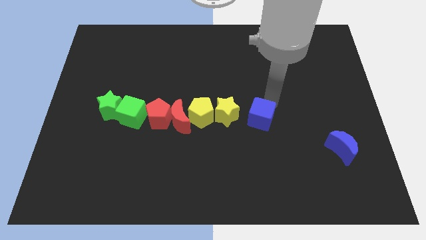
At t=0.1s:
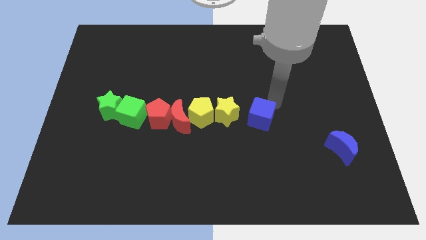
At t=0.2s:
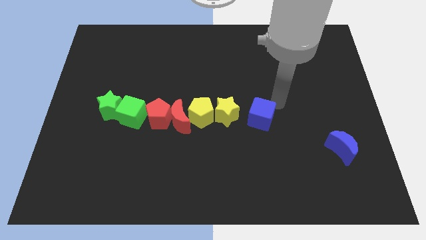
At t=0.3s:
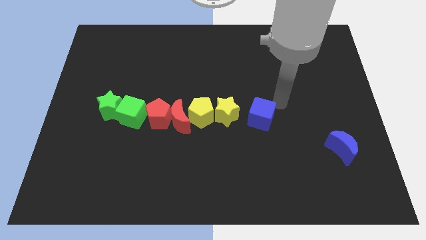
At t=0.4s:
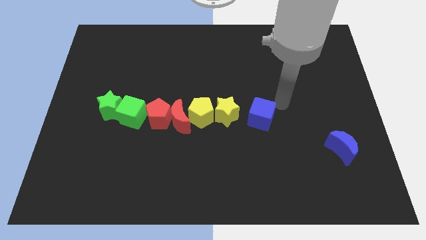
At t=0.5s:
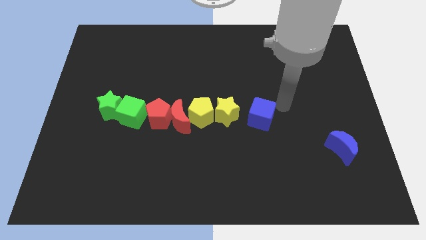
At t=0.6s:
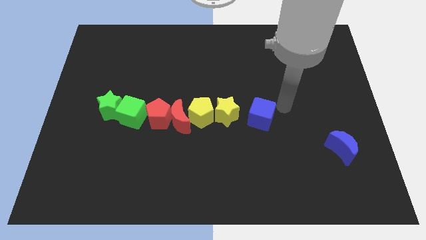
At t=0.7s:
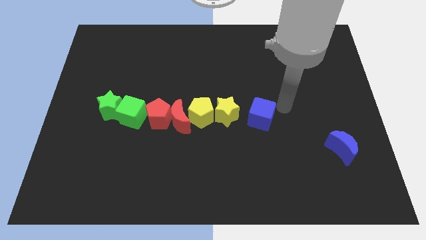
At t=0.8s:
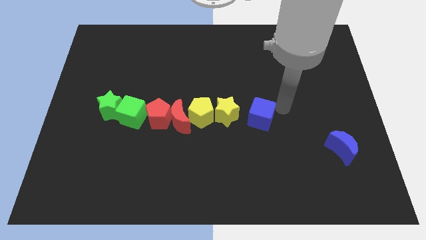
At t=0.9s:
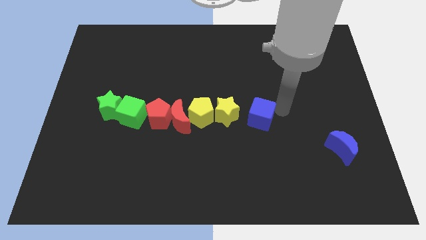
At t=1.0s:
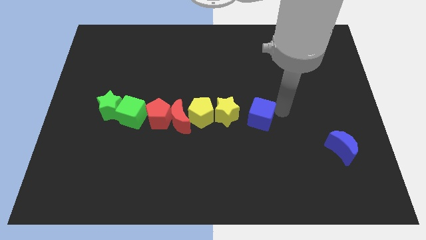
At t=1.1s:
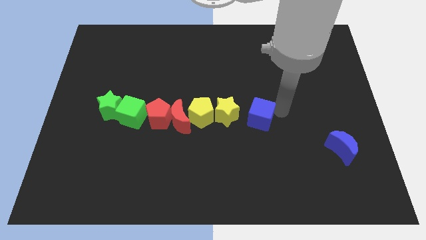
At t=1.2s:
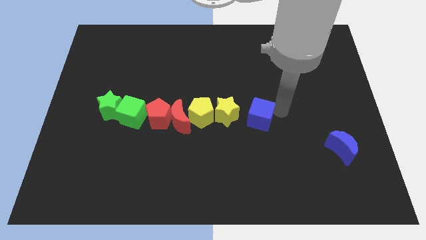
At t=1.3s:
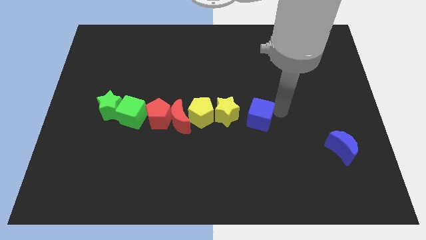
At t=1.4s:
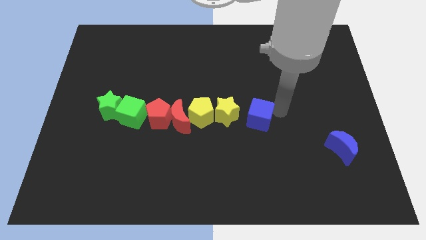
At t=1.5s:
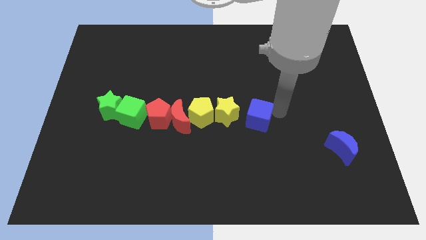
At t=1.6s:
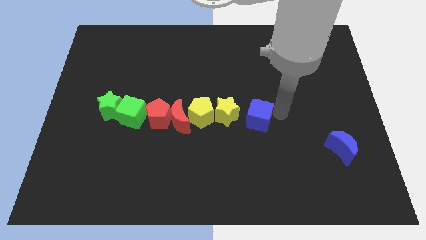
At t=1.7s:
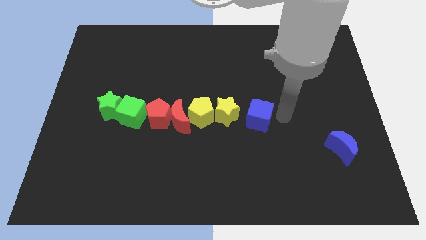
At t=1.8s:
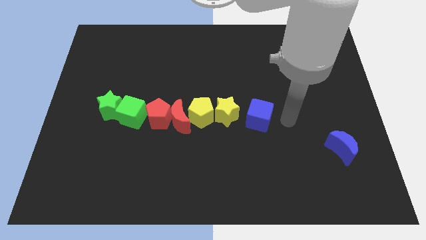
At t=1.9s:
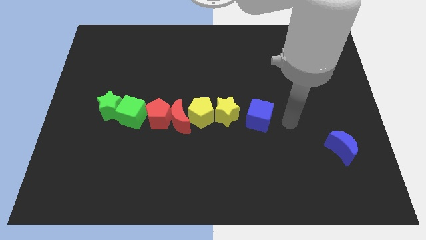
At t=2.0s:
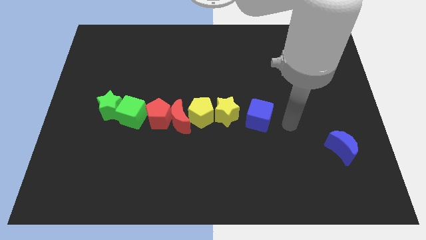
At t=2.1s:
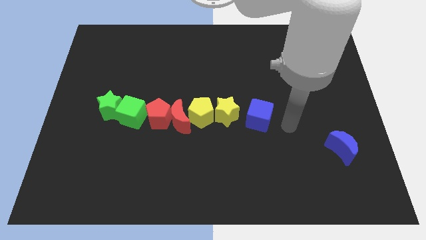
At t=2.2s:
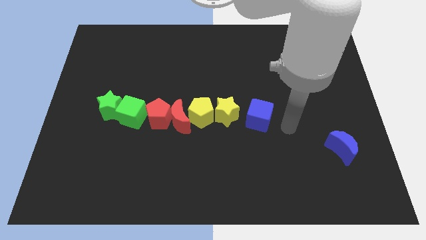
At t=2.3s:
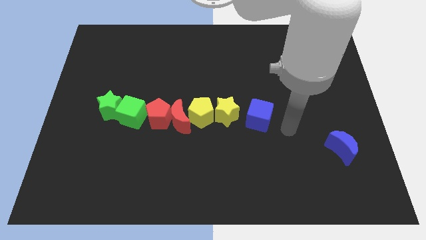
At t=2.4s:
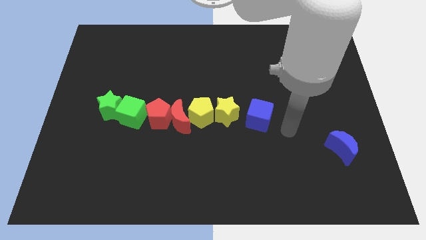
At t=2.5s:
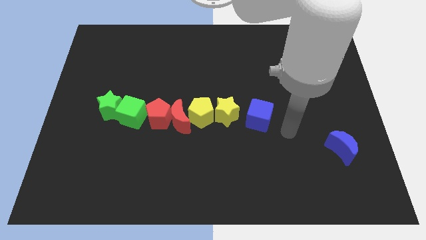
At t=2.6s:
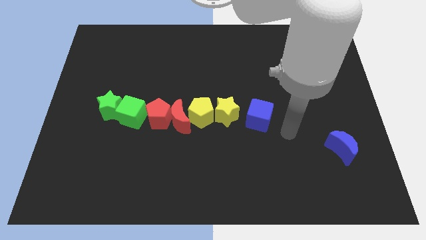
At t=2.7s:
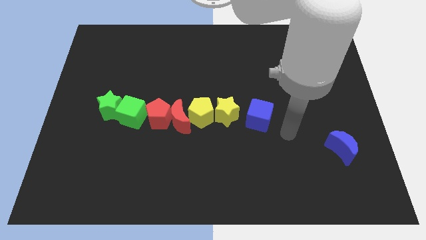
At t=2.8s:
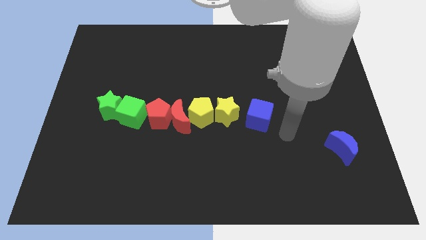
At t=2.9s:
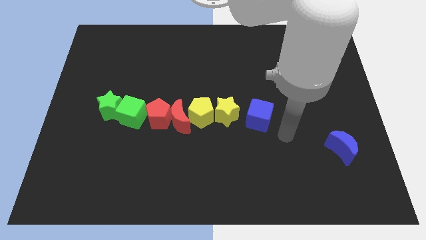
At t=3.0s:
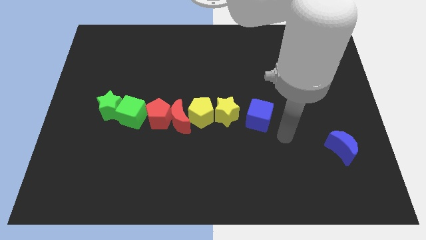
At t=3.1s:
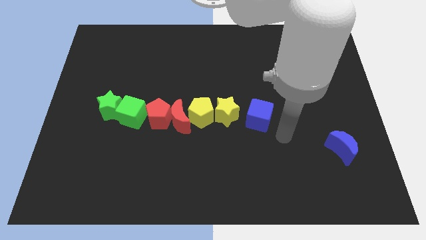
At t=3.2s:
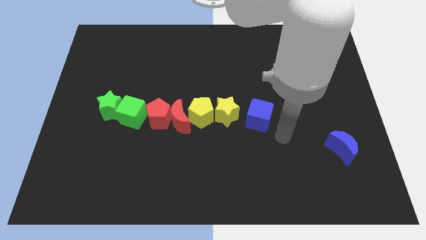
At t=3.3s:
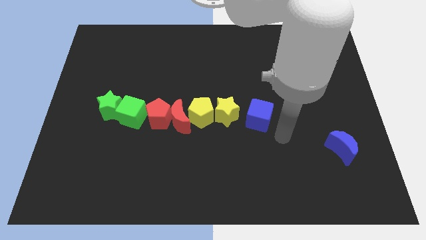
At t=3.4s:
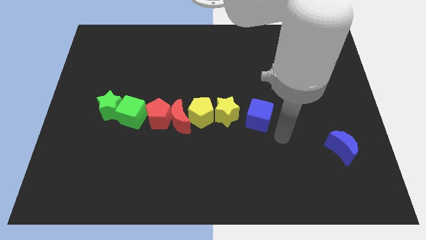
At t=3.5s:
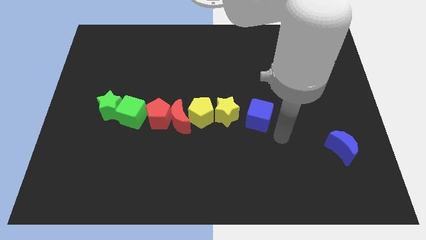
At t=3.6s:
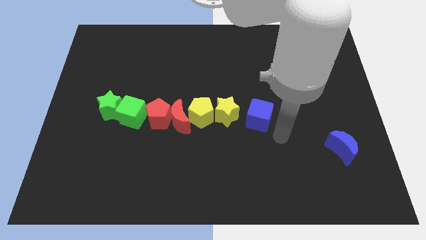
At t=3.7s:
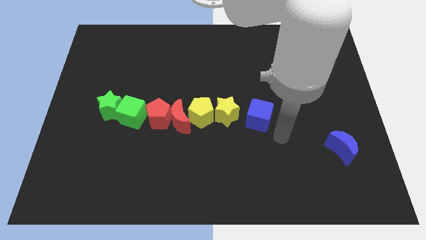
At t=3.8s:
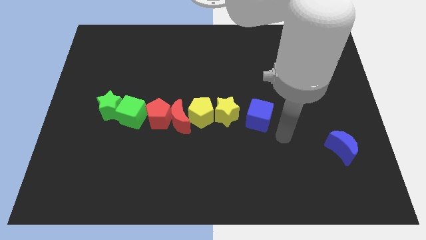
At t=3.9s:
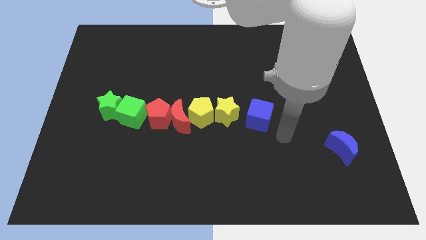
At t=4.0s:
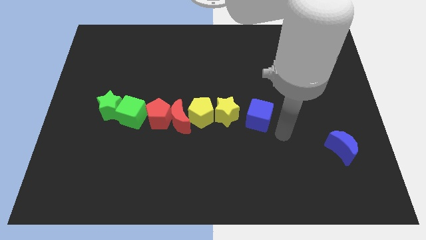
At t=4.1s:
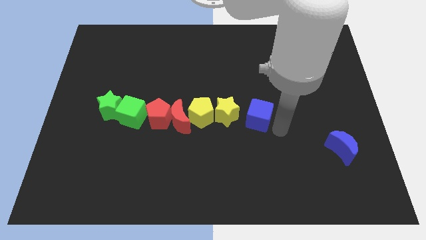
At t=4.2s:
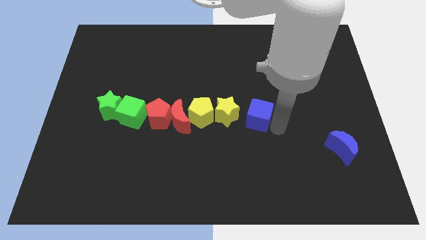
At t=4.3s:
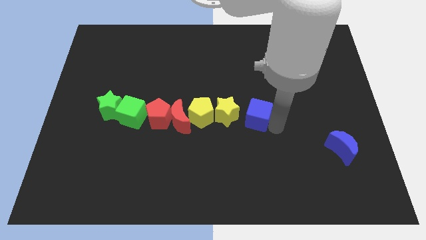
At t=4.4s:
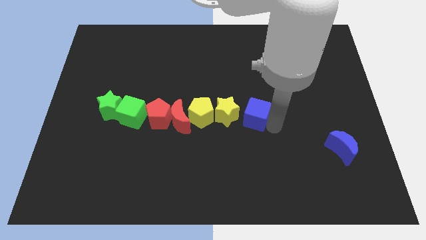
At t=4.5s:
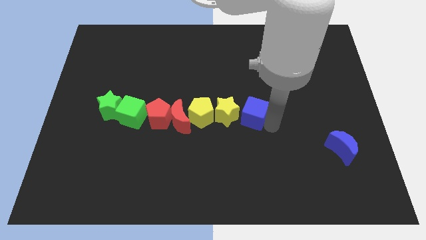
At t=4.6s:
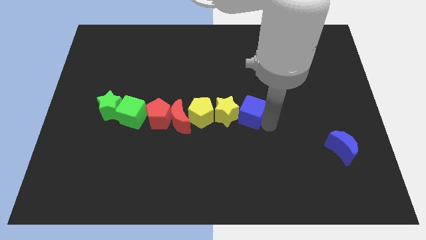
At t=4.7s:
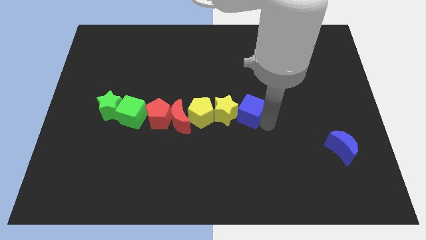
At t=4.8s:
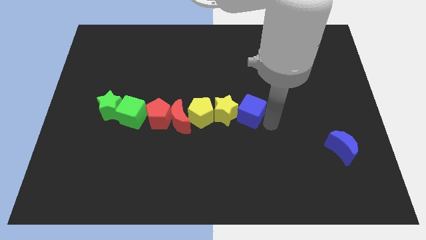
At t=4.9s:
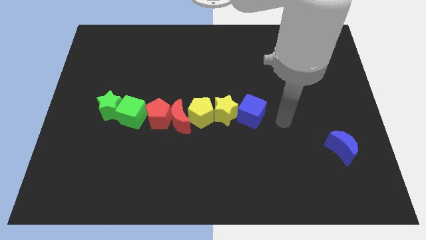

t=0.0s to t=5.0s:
push the blue cube into the yellow star

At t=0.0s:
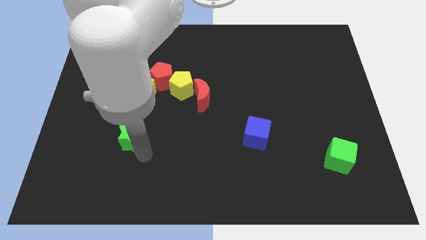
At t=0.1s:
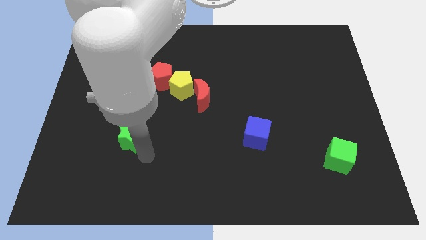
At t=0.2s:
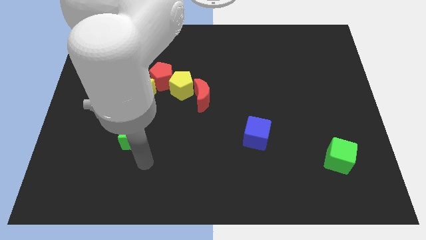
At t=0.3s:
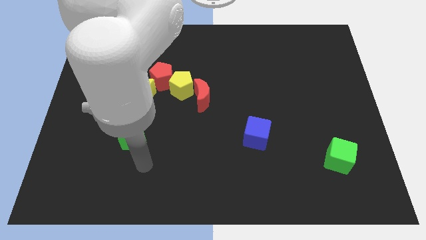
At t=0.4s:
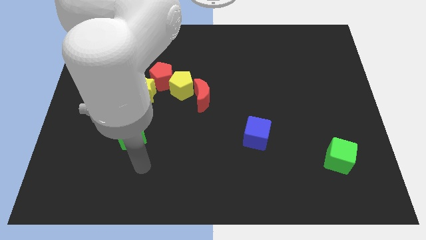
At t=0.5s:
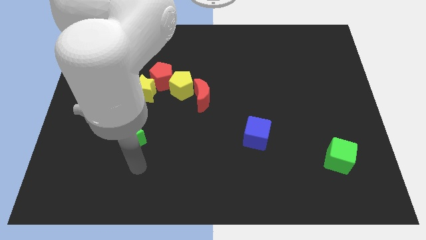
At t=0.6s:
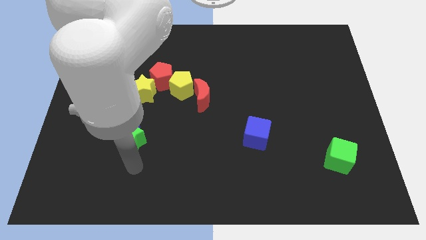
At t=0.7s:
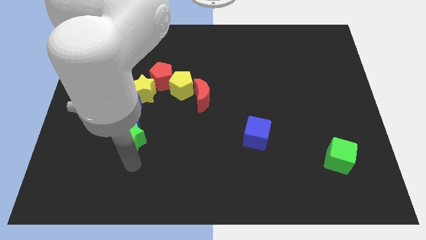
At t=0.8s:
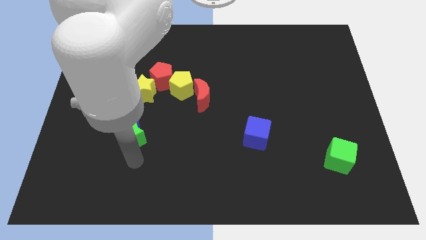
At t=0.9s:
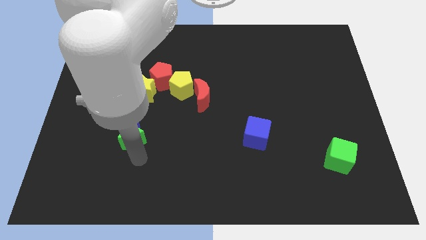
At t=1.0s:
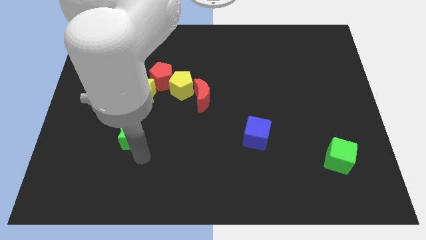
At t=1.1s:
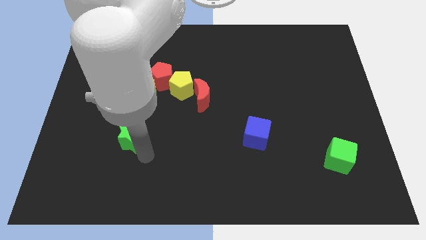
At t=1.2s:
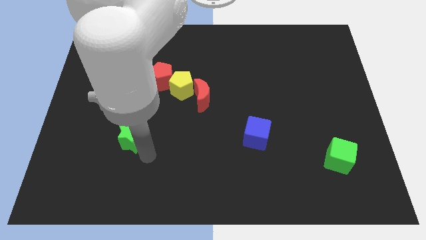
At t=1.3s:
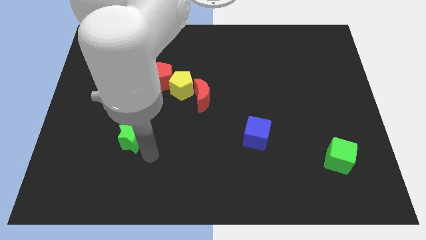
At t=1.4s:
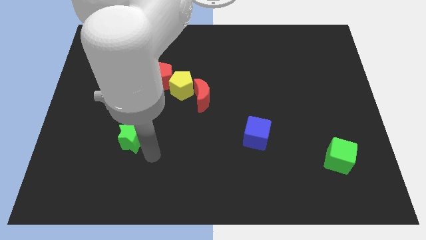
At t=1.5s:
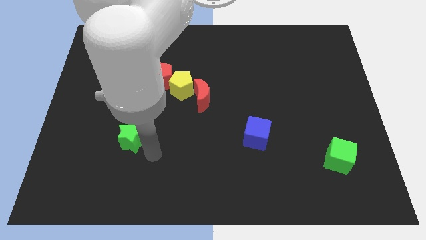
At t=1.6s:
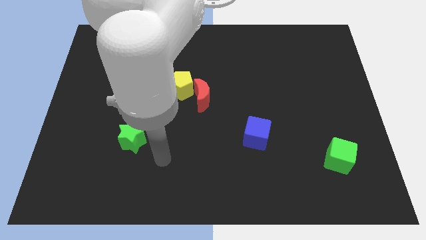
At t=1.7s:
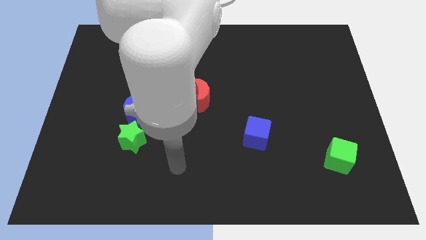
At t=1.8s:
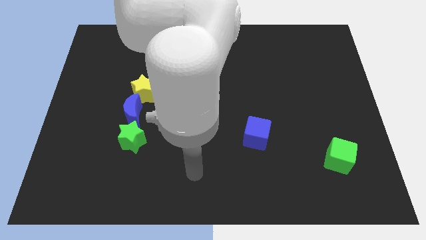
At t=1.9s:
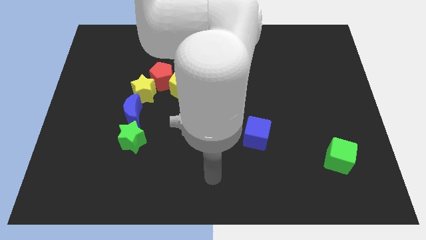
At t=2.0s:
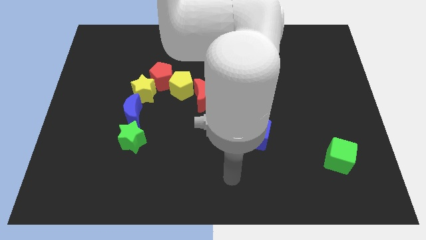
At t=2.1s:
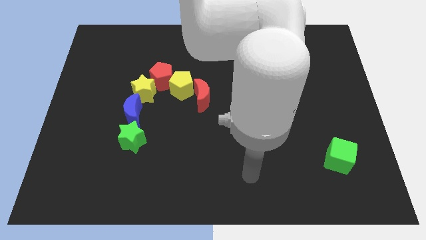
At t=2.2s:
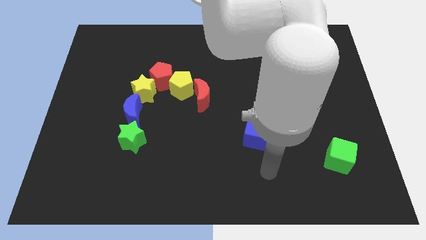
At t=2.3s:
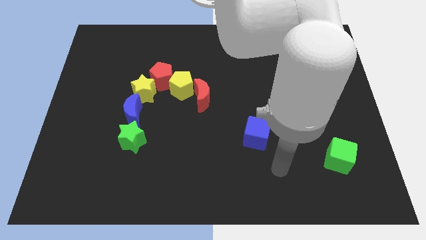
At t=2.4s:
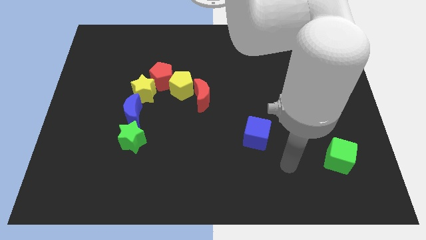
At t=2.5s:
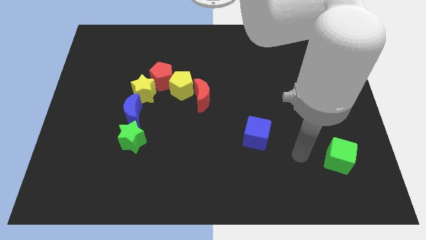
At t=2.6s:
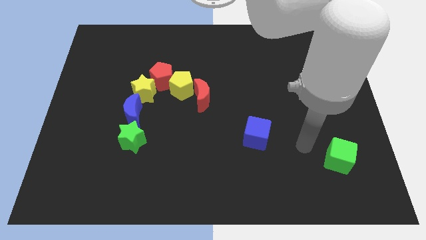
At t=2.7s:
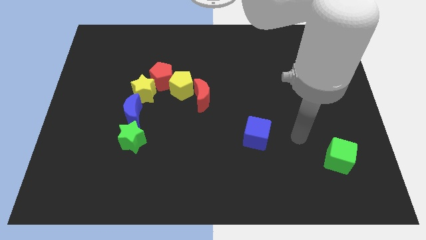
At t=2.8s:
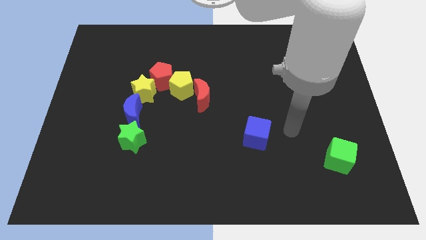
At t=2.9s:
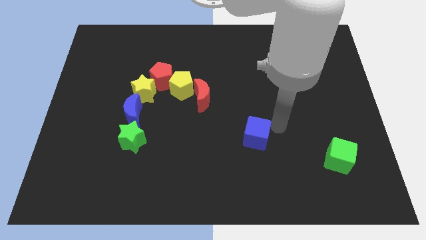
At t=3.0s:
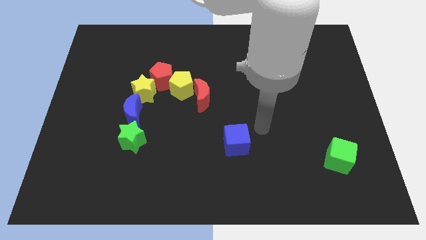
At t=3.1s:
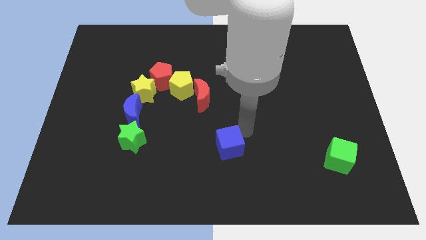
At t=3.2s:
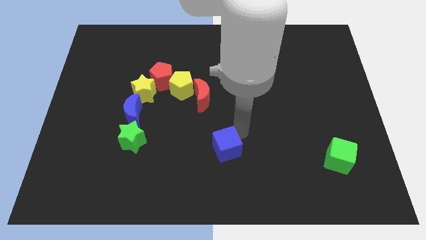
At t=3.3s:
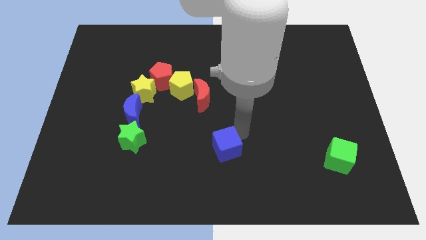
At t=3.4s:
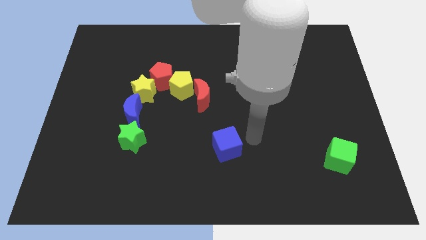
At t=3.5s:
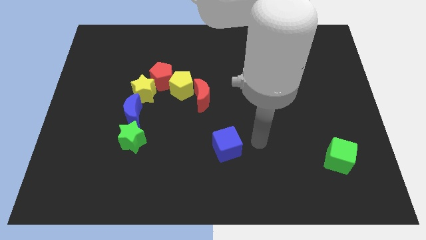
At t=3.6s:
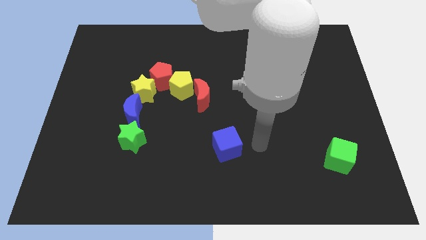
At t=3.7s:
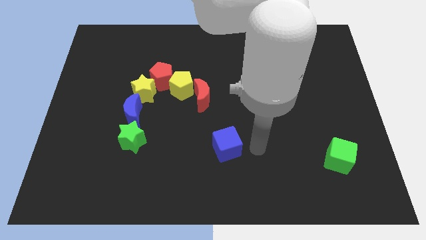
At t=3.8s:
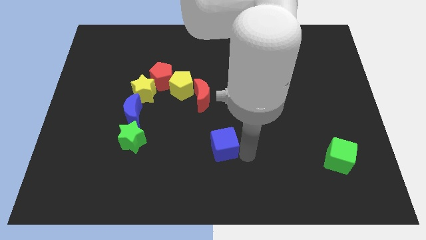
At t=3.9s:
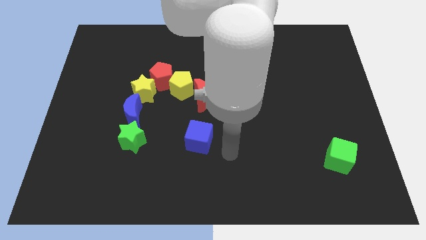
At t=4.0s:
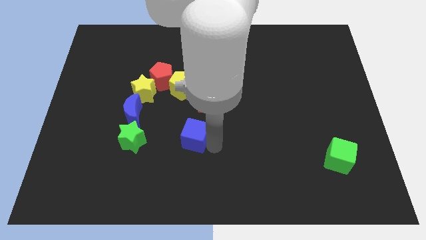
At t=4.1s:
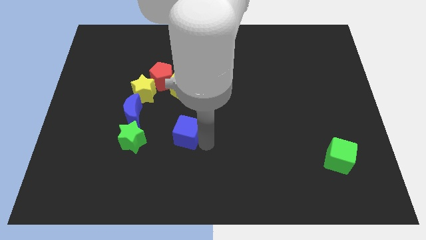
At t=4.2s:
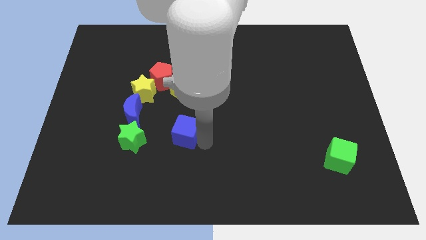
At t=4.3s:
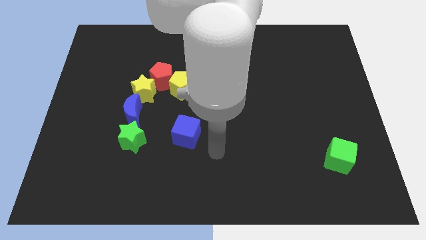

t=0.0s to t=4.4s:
move the blue cube towards the green star
